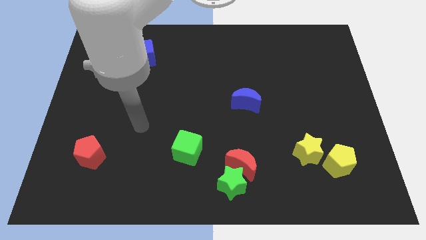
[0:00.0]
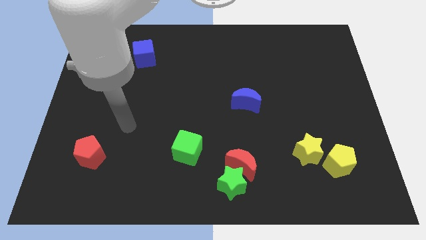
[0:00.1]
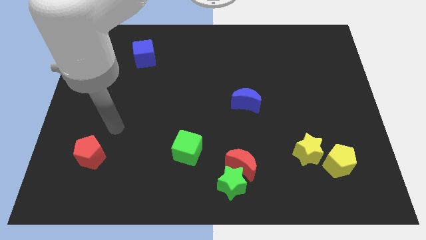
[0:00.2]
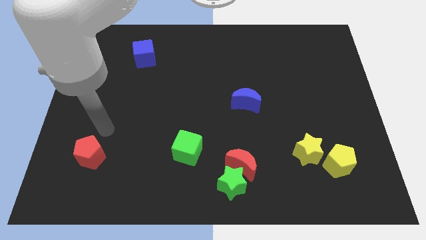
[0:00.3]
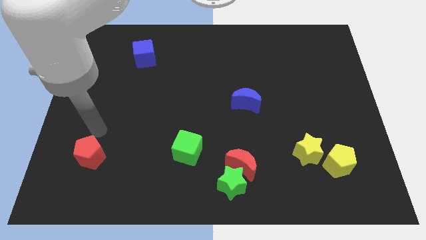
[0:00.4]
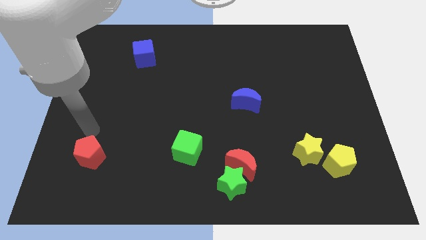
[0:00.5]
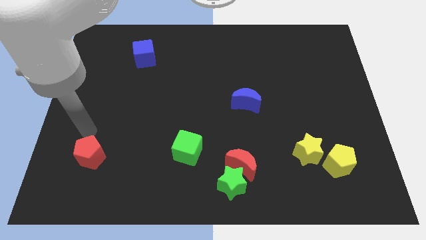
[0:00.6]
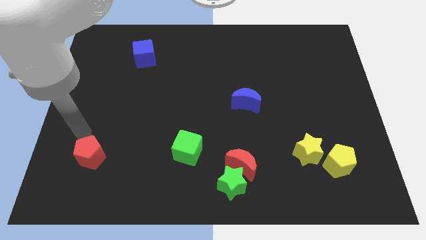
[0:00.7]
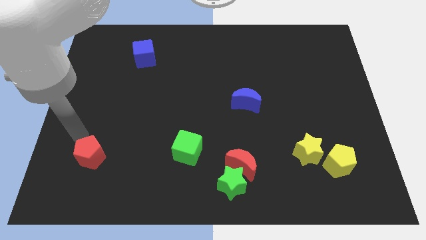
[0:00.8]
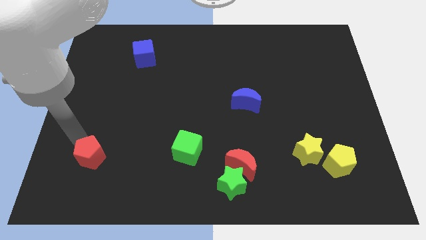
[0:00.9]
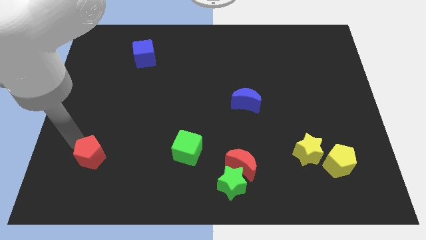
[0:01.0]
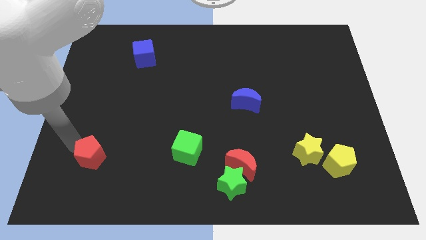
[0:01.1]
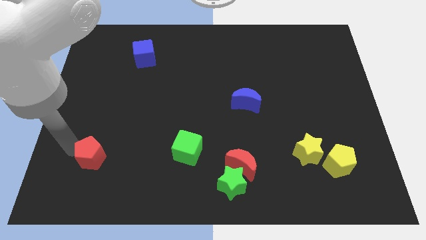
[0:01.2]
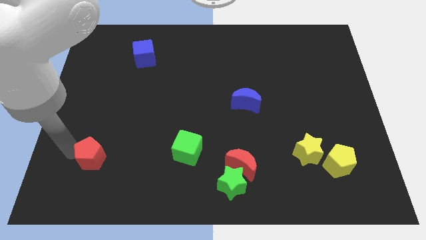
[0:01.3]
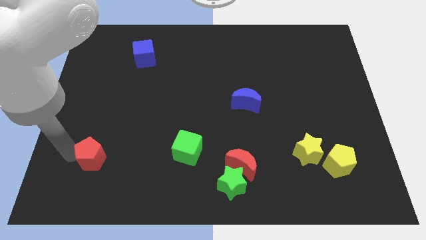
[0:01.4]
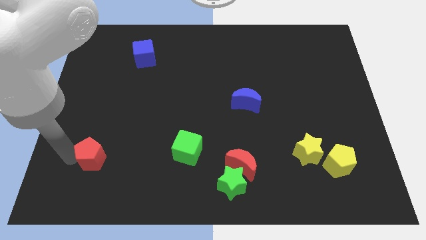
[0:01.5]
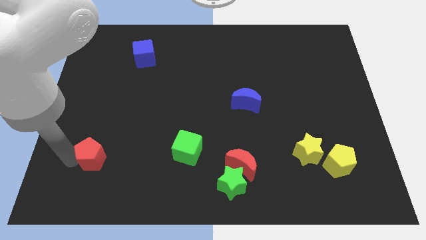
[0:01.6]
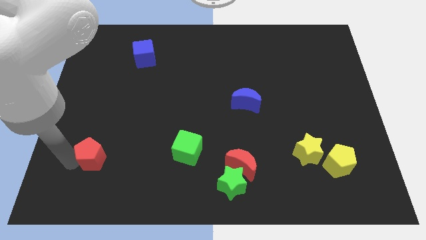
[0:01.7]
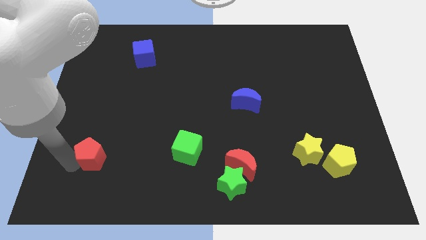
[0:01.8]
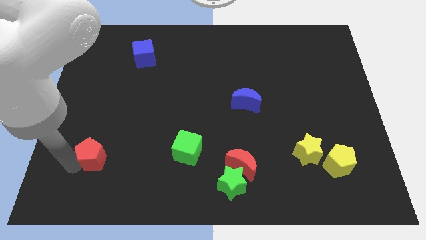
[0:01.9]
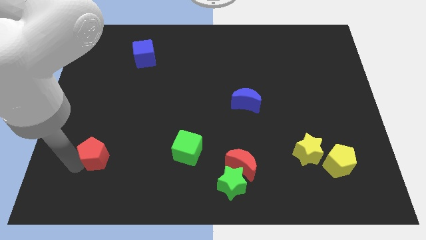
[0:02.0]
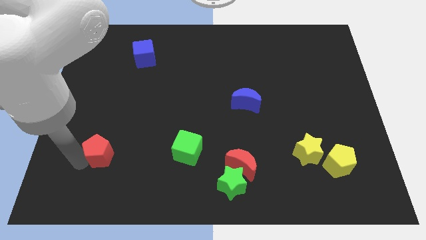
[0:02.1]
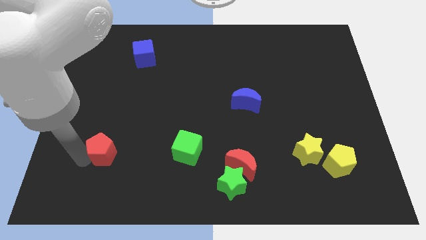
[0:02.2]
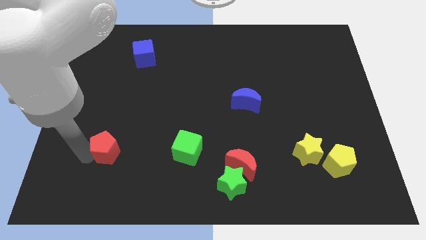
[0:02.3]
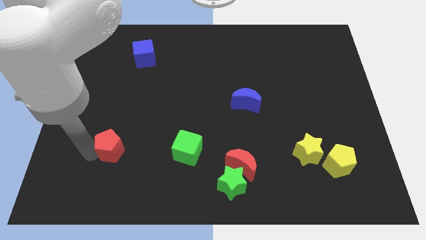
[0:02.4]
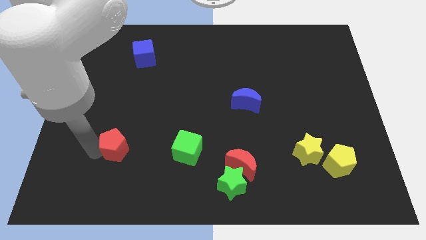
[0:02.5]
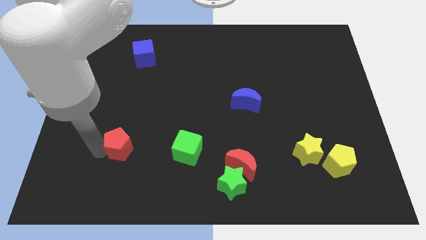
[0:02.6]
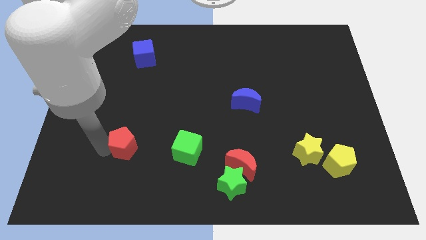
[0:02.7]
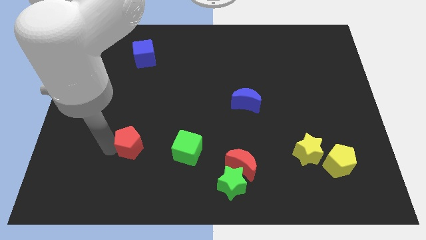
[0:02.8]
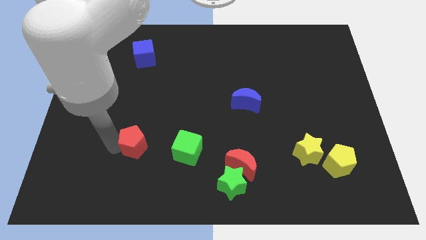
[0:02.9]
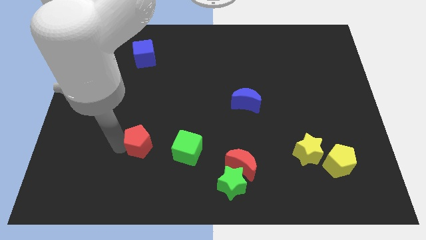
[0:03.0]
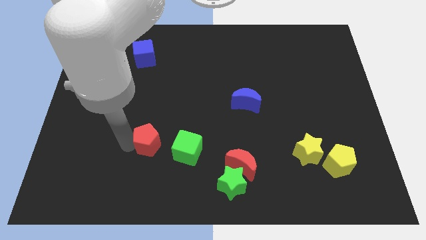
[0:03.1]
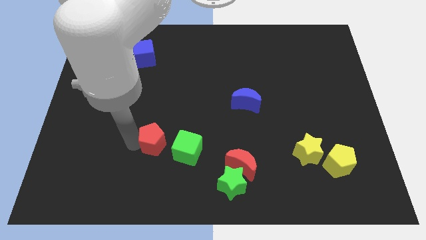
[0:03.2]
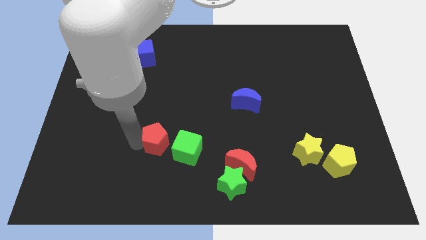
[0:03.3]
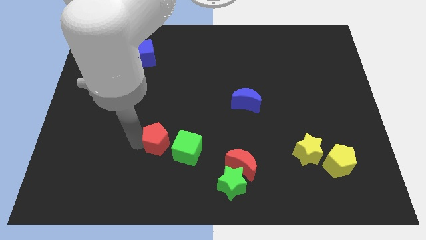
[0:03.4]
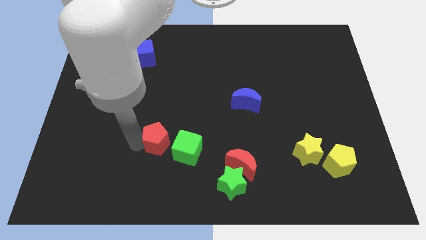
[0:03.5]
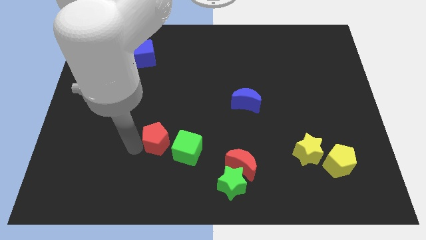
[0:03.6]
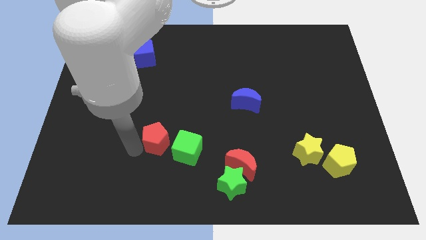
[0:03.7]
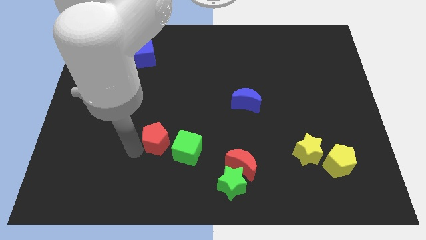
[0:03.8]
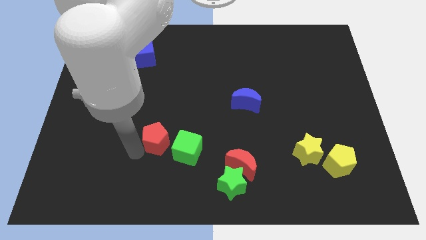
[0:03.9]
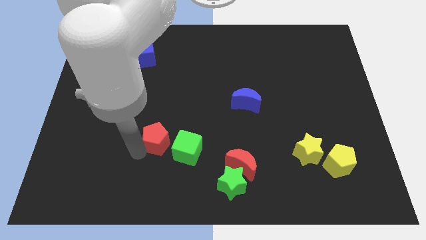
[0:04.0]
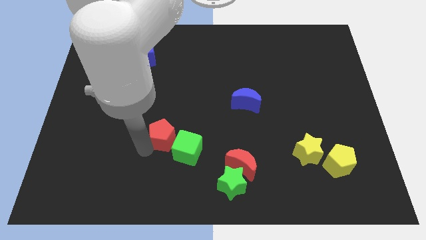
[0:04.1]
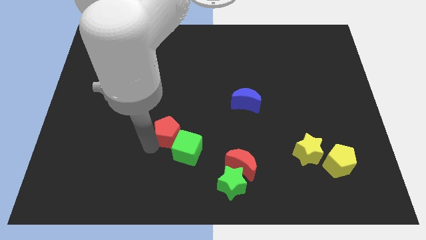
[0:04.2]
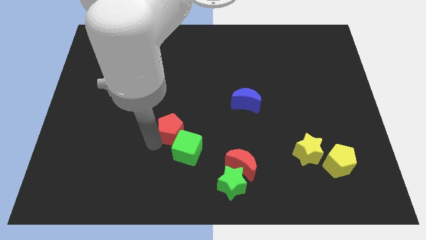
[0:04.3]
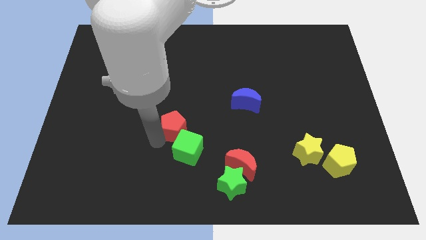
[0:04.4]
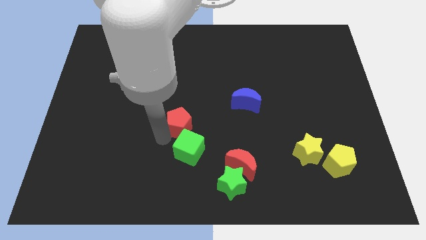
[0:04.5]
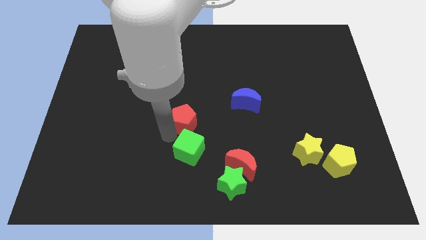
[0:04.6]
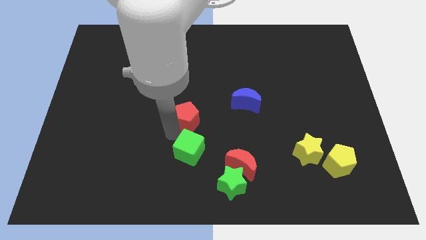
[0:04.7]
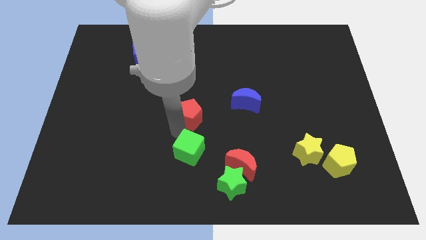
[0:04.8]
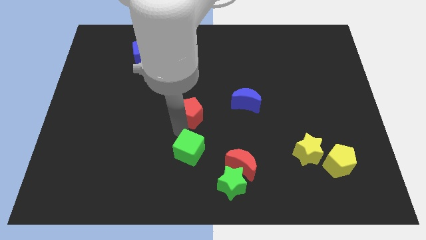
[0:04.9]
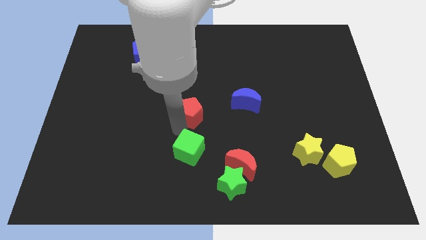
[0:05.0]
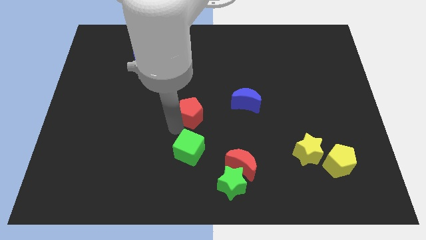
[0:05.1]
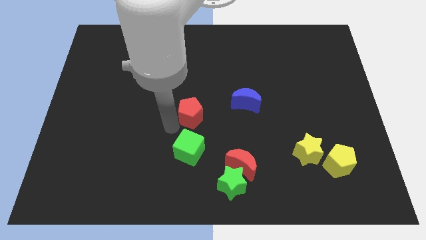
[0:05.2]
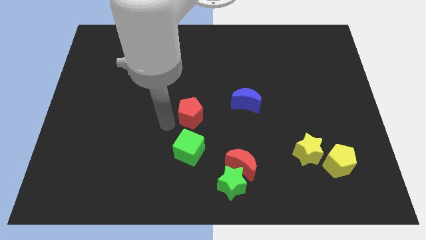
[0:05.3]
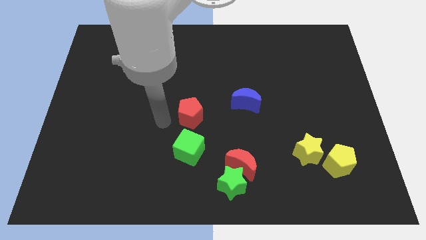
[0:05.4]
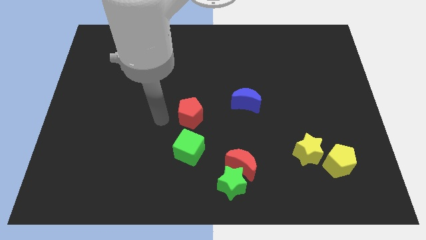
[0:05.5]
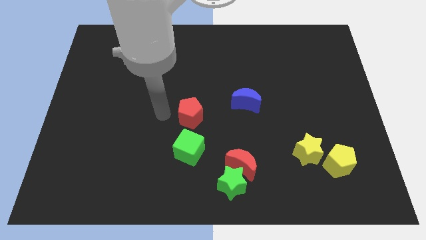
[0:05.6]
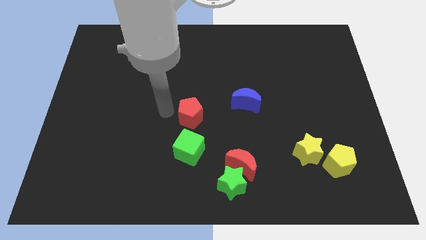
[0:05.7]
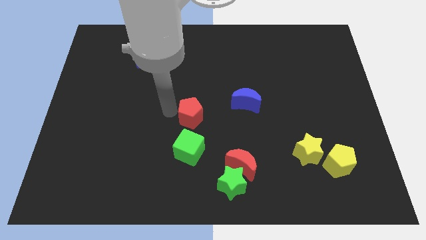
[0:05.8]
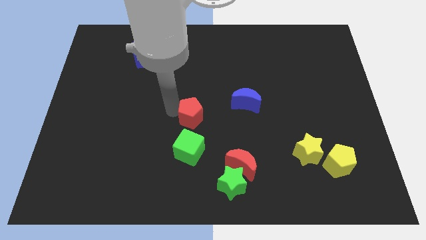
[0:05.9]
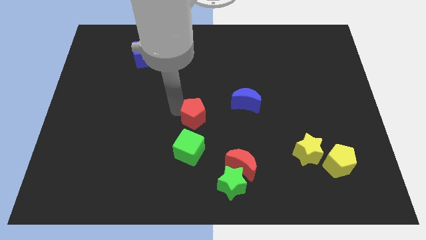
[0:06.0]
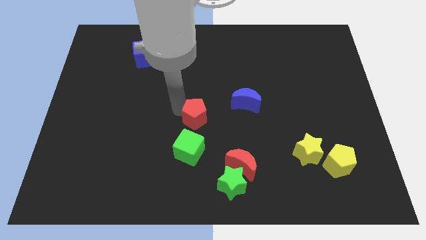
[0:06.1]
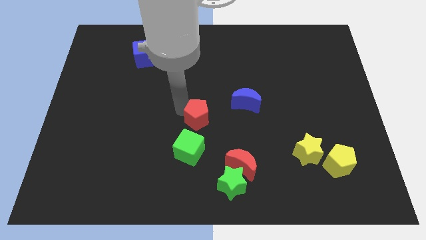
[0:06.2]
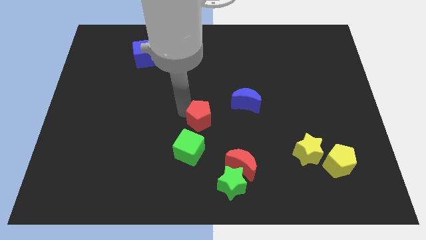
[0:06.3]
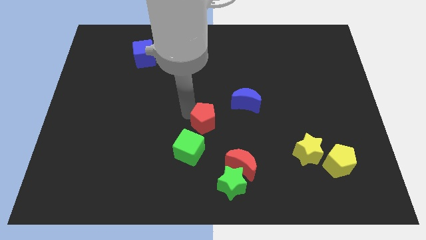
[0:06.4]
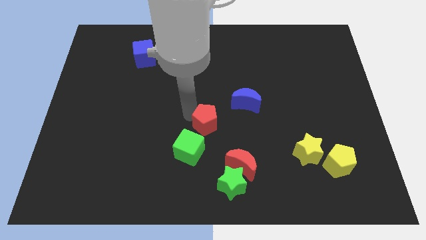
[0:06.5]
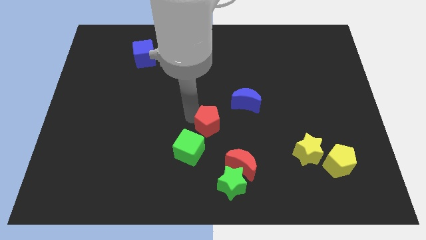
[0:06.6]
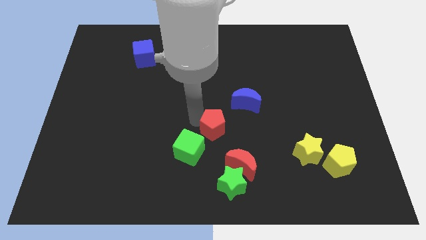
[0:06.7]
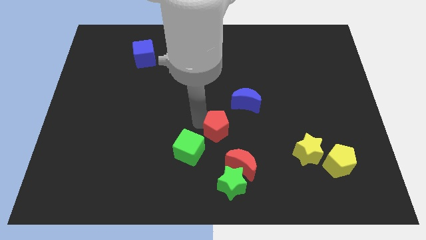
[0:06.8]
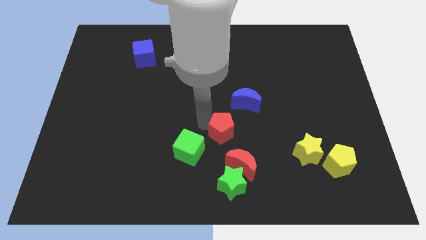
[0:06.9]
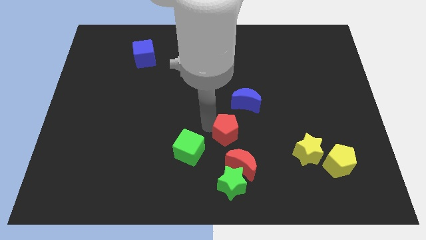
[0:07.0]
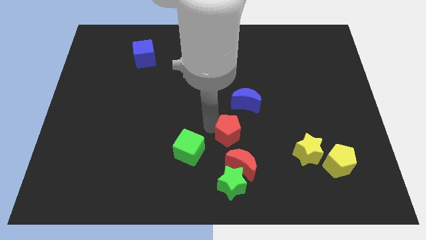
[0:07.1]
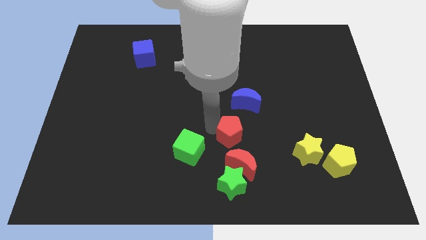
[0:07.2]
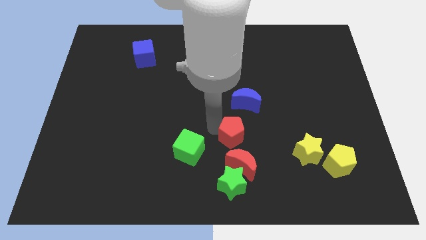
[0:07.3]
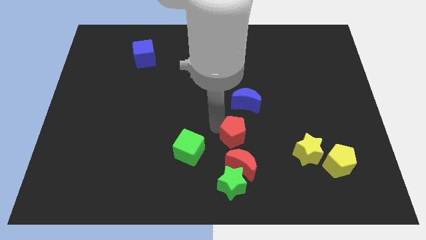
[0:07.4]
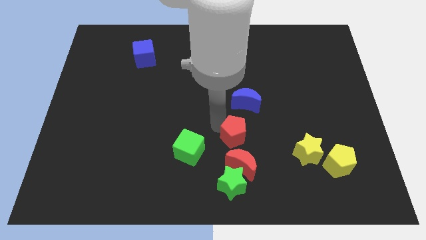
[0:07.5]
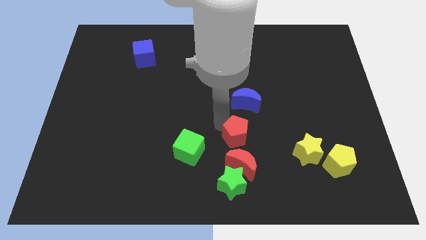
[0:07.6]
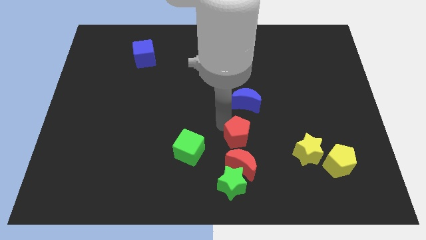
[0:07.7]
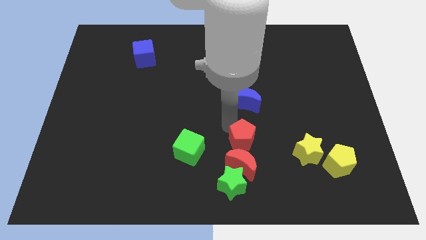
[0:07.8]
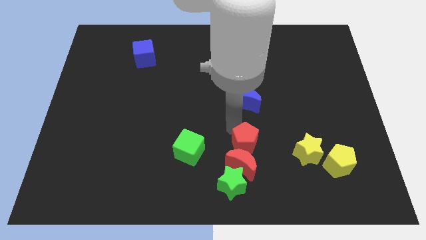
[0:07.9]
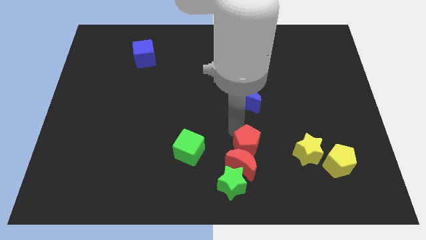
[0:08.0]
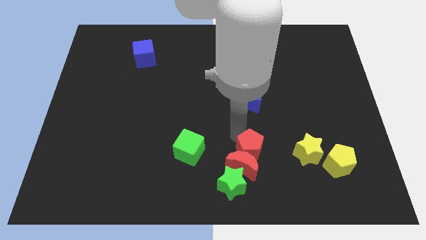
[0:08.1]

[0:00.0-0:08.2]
slide the red pentagon close to the red moon
